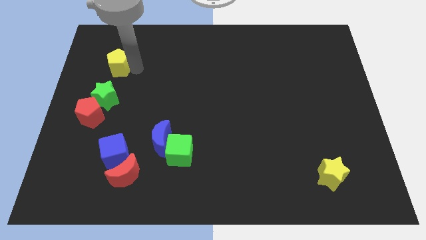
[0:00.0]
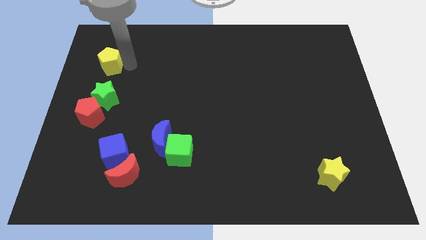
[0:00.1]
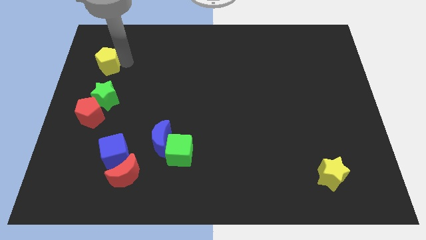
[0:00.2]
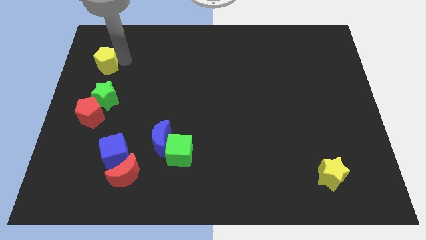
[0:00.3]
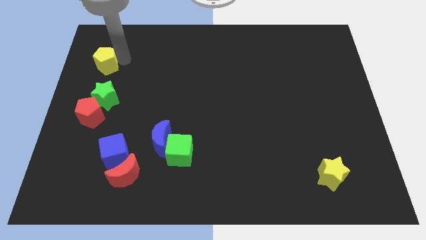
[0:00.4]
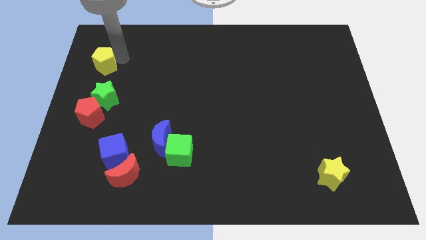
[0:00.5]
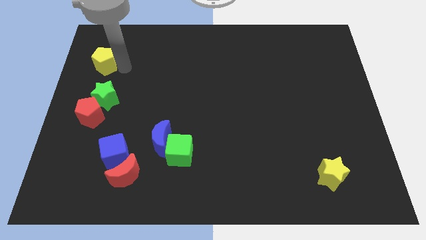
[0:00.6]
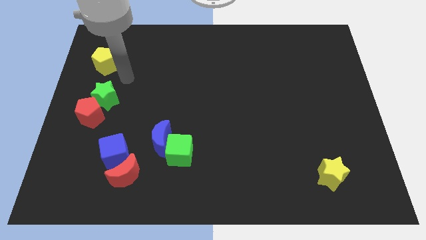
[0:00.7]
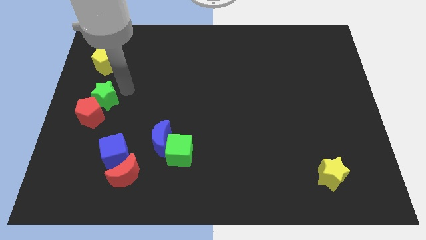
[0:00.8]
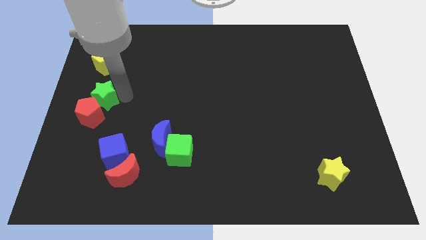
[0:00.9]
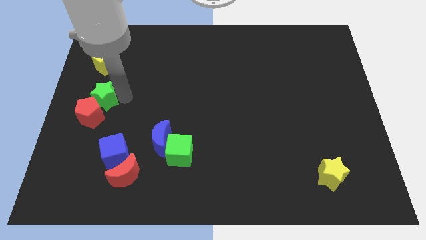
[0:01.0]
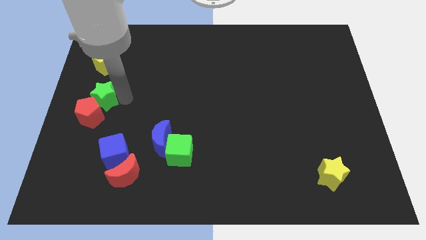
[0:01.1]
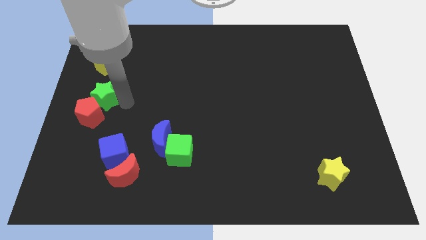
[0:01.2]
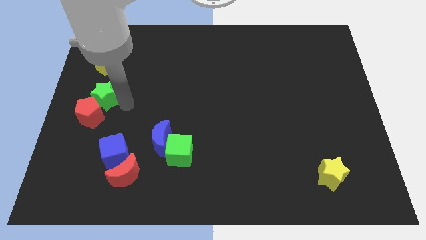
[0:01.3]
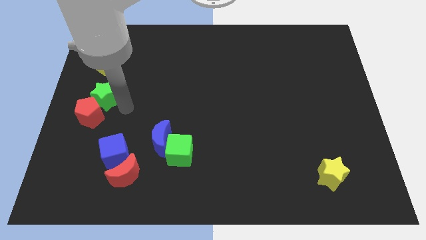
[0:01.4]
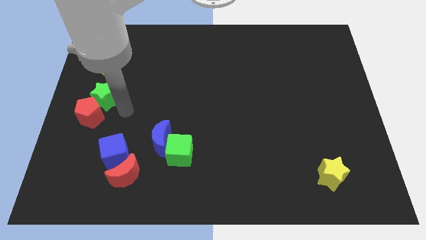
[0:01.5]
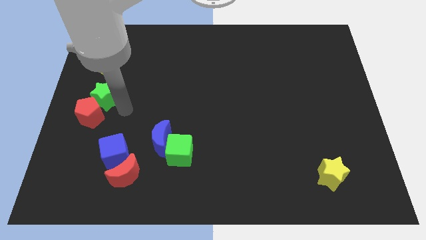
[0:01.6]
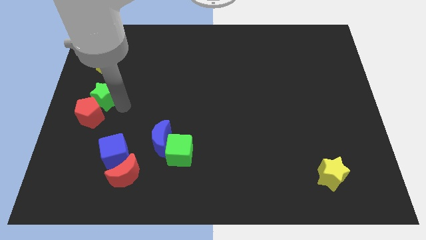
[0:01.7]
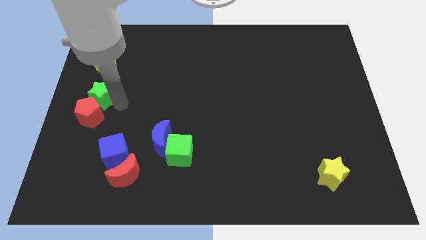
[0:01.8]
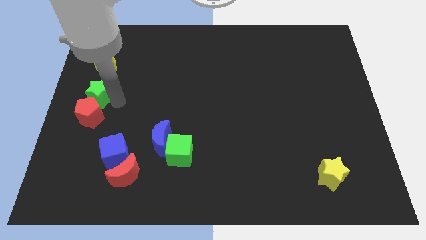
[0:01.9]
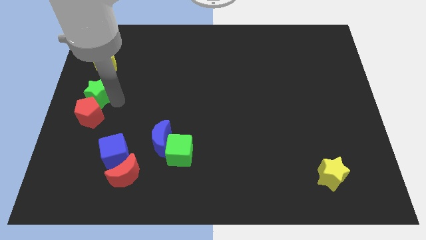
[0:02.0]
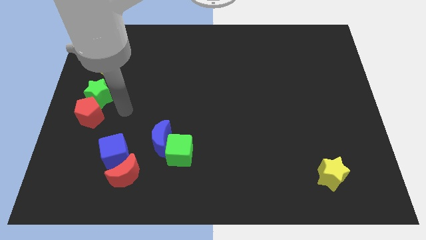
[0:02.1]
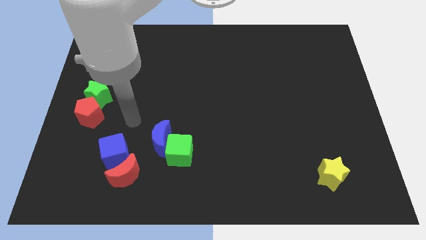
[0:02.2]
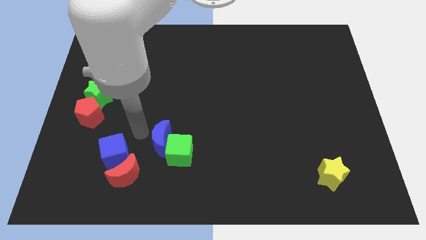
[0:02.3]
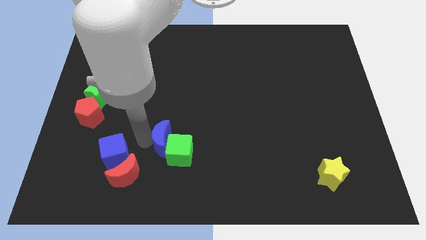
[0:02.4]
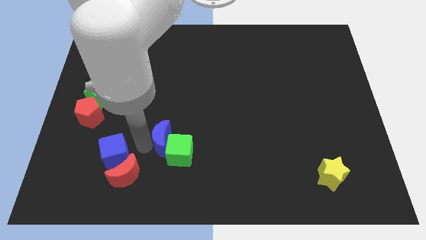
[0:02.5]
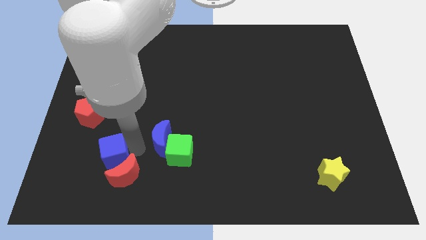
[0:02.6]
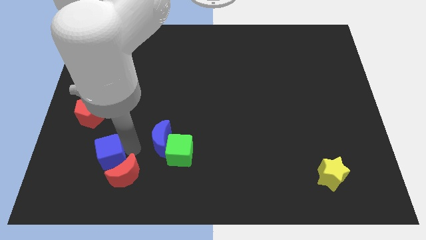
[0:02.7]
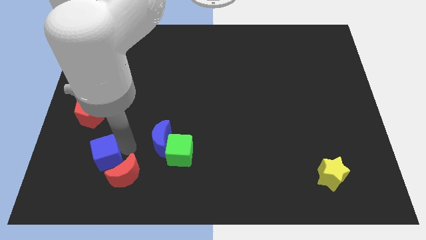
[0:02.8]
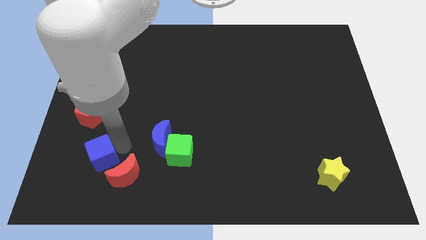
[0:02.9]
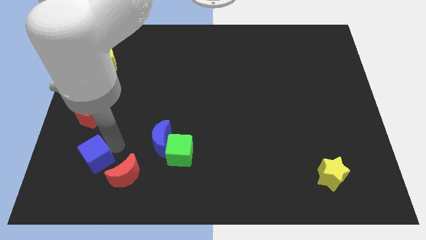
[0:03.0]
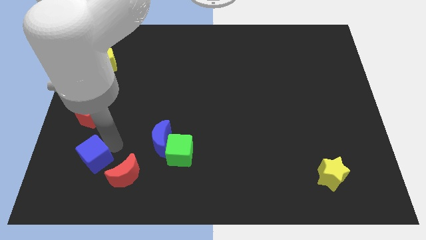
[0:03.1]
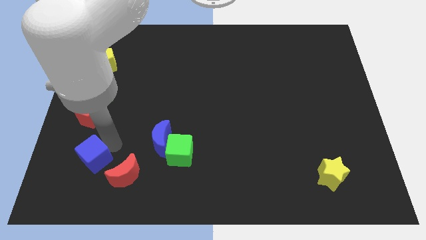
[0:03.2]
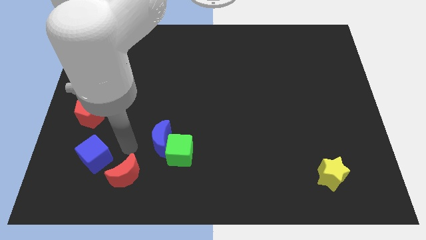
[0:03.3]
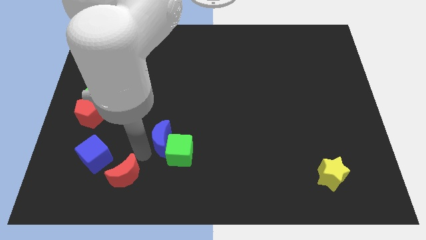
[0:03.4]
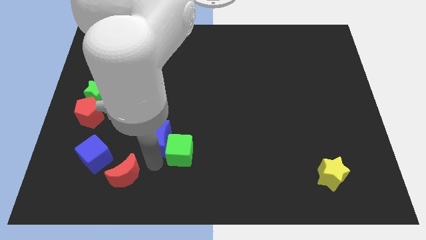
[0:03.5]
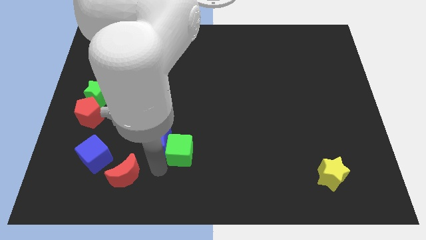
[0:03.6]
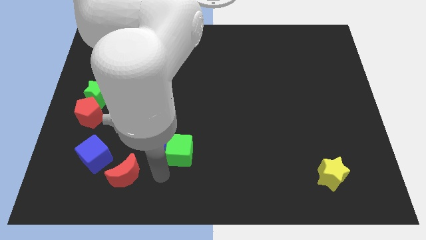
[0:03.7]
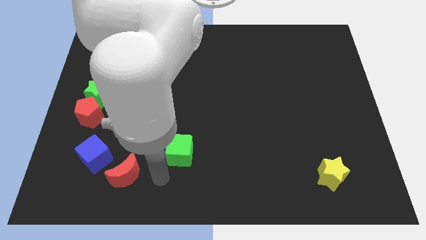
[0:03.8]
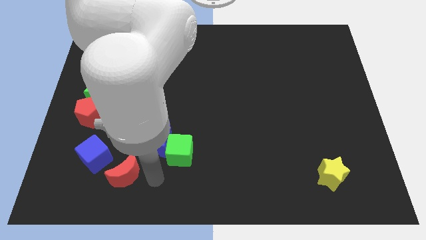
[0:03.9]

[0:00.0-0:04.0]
slightly push the blue cube towards the left

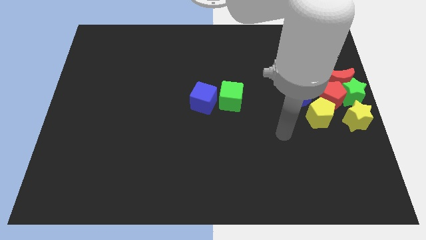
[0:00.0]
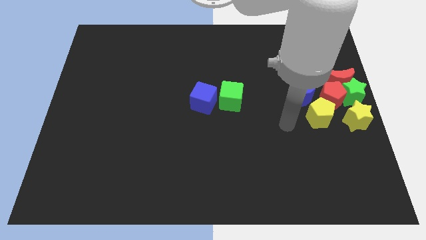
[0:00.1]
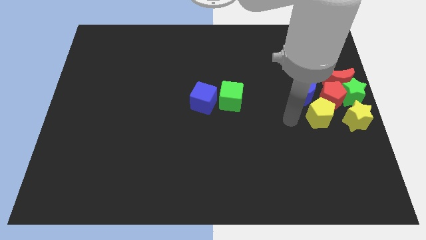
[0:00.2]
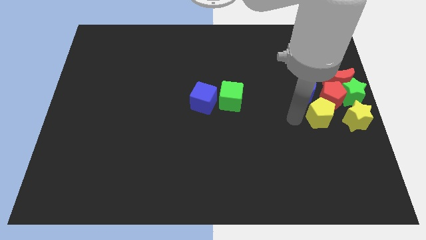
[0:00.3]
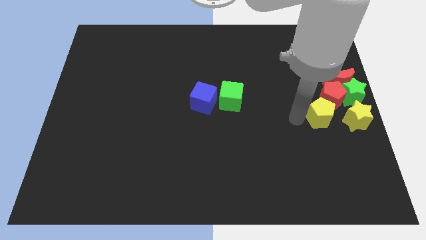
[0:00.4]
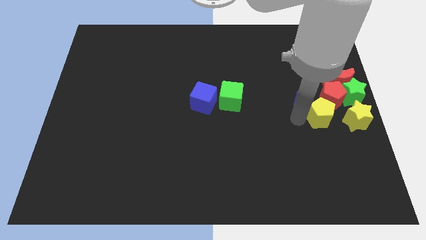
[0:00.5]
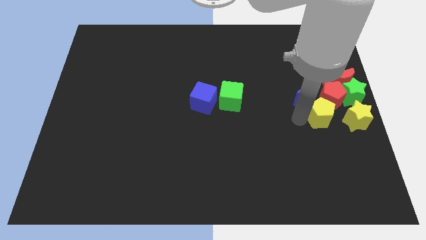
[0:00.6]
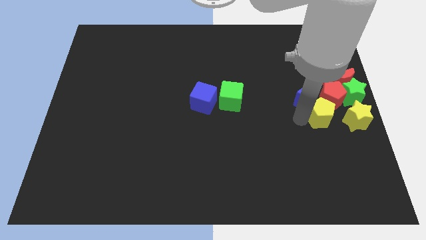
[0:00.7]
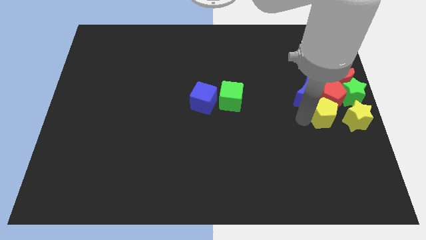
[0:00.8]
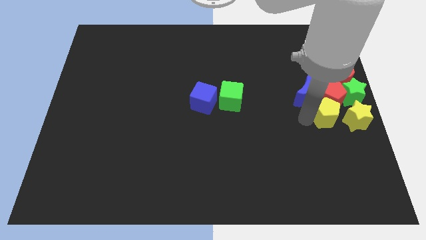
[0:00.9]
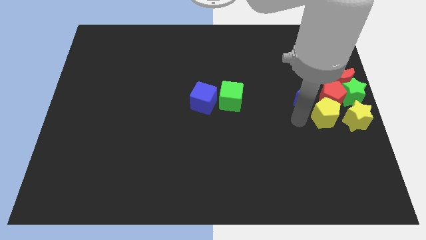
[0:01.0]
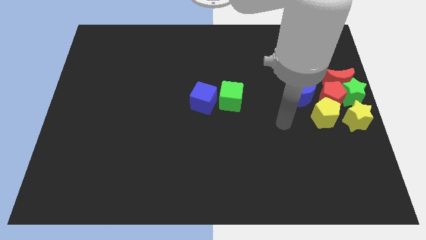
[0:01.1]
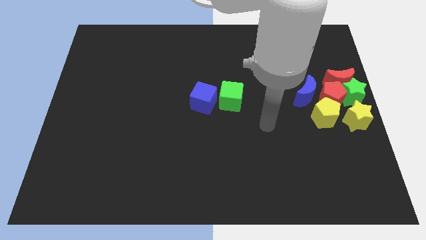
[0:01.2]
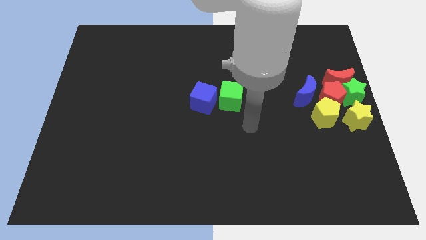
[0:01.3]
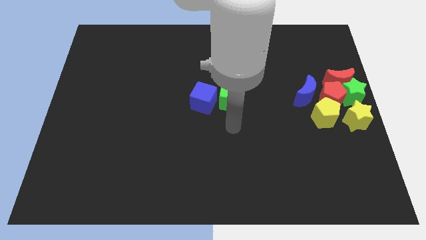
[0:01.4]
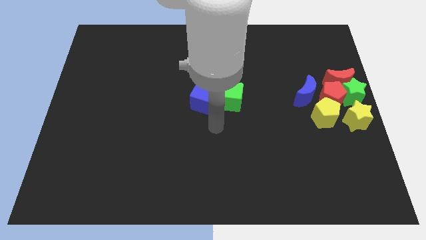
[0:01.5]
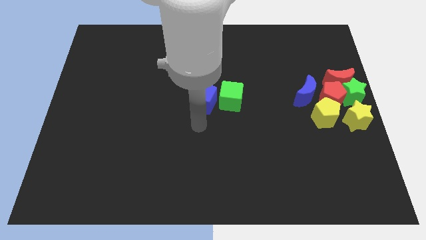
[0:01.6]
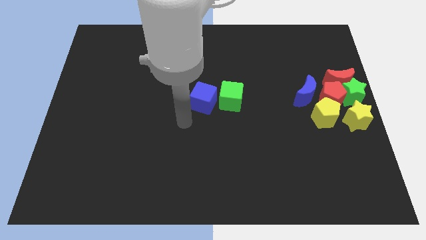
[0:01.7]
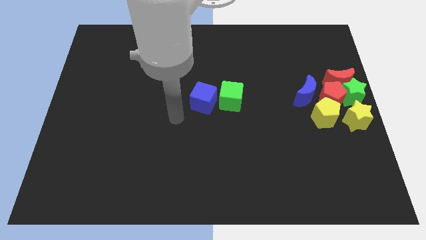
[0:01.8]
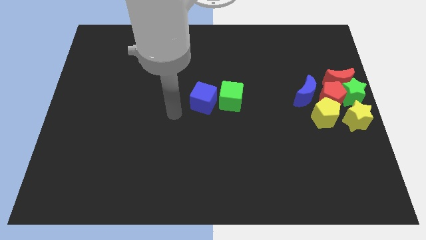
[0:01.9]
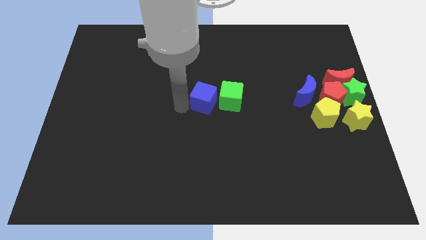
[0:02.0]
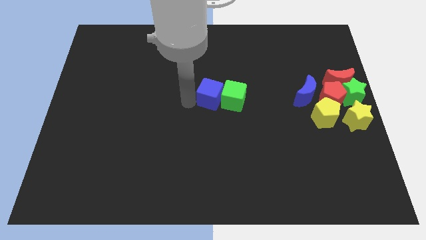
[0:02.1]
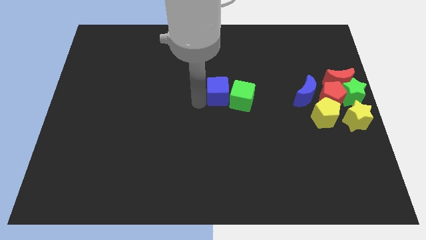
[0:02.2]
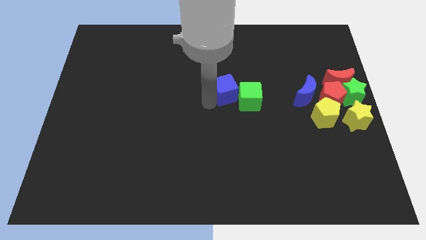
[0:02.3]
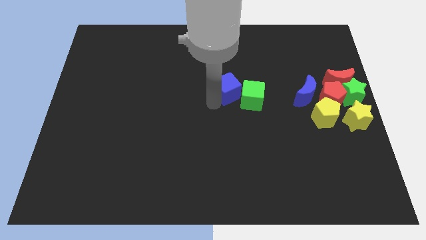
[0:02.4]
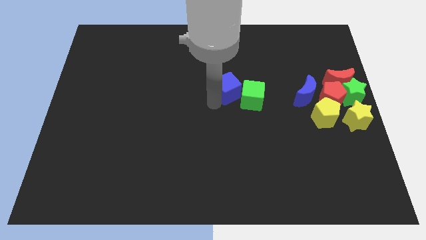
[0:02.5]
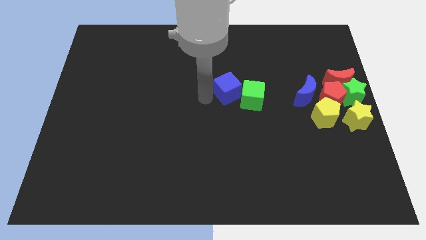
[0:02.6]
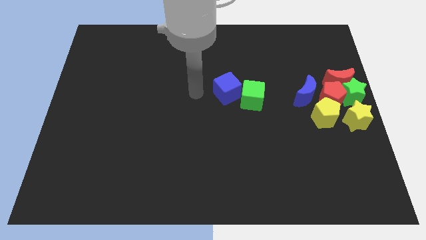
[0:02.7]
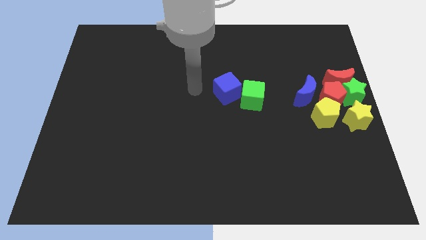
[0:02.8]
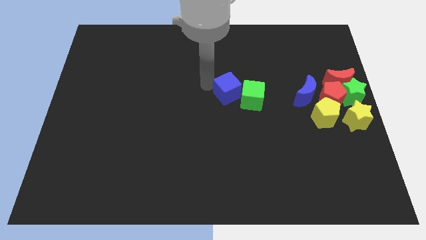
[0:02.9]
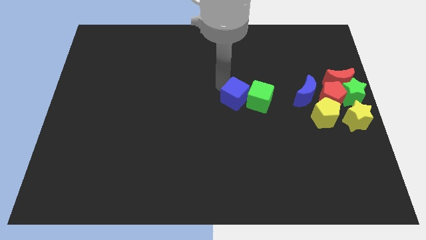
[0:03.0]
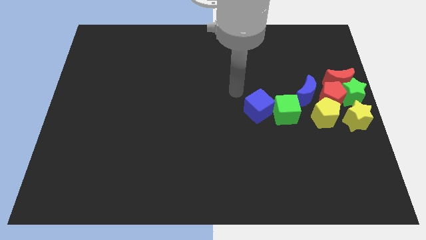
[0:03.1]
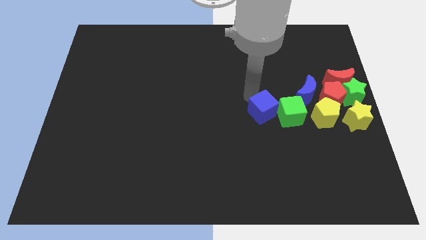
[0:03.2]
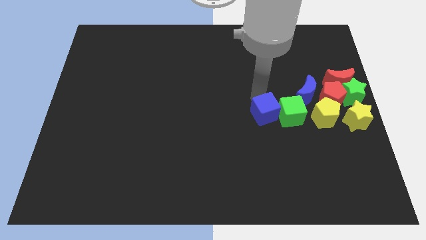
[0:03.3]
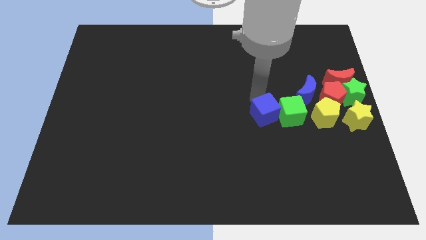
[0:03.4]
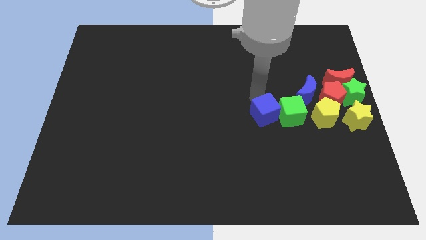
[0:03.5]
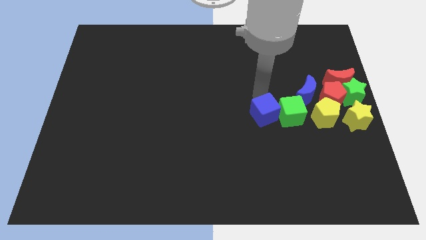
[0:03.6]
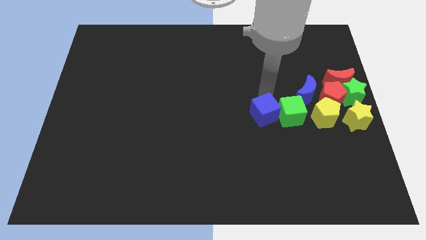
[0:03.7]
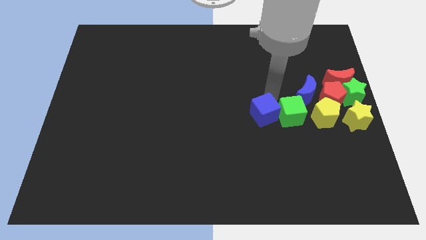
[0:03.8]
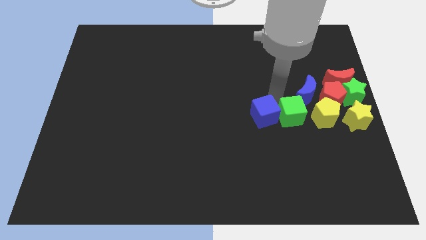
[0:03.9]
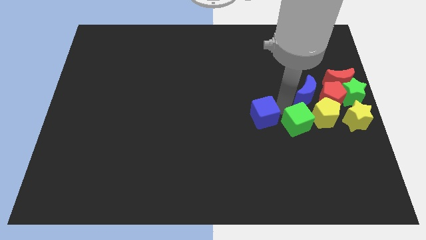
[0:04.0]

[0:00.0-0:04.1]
push the cubes to the center right side of the board

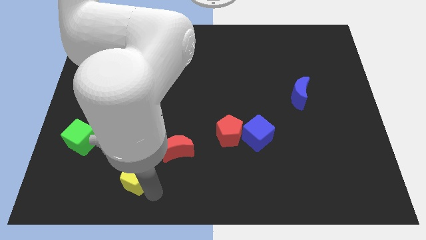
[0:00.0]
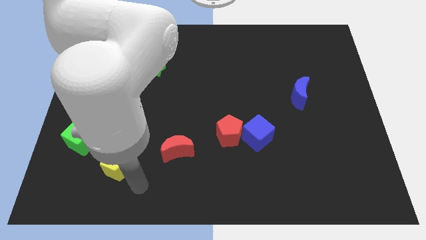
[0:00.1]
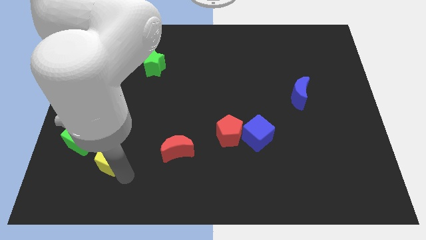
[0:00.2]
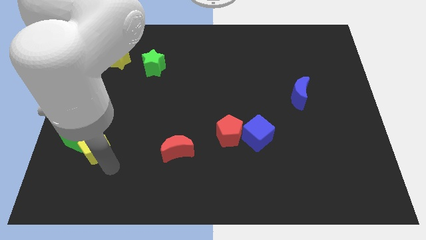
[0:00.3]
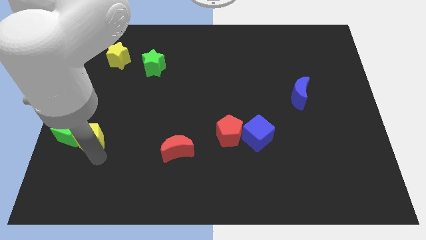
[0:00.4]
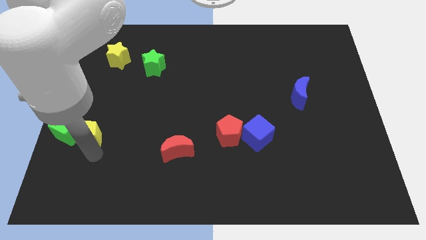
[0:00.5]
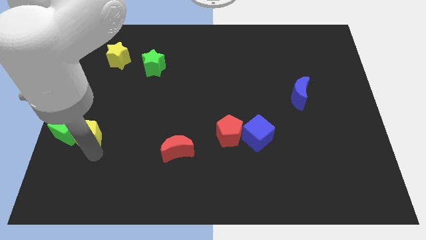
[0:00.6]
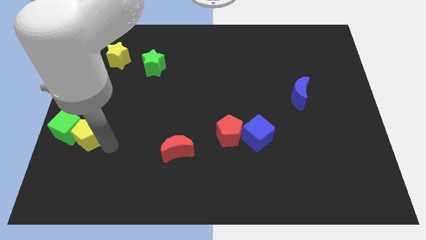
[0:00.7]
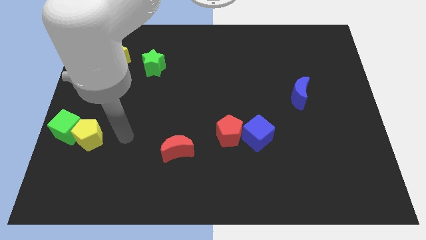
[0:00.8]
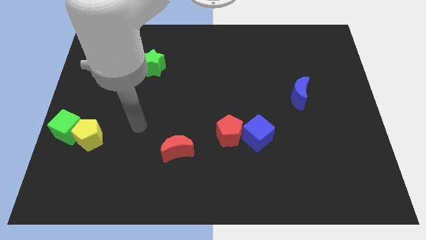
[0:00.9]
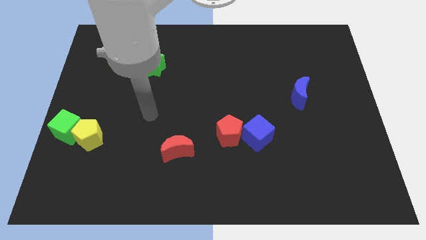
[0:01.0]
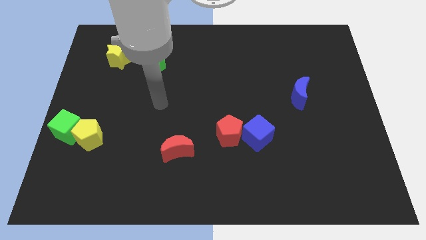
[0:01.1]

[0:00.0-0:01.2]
move the yellow pentagon to the right of the green cube
